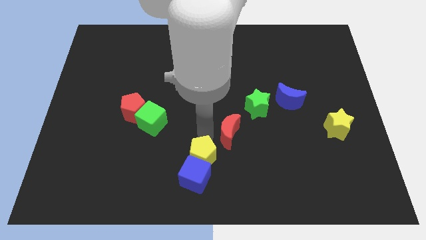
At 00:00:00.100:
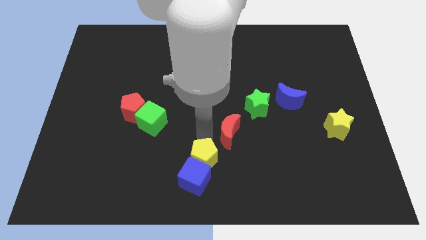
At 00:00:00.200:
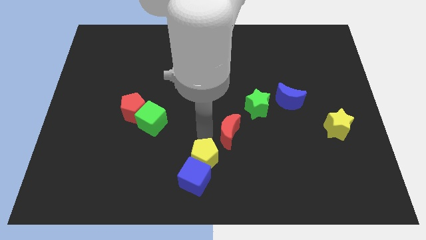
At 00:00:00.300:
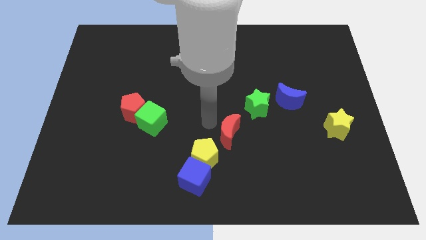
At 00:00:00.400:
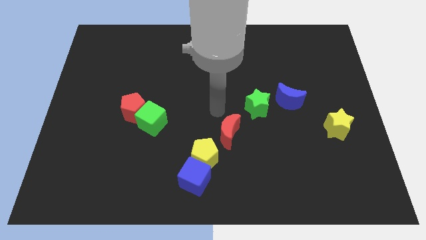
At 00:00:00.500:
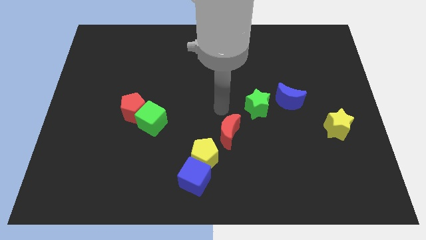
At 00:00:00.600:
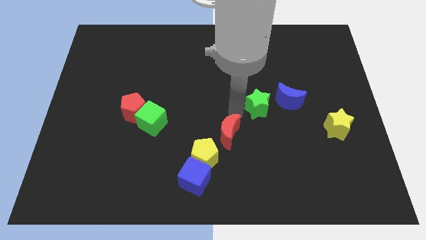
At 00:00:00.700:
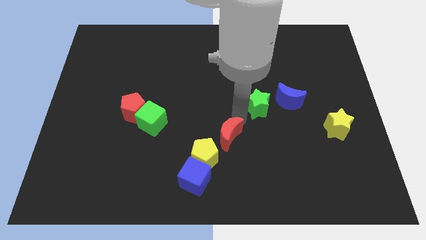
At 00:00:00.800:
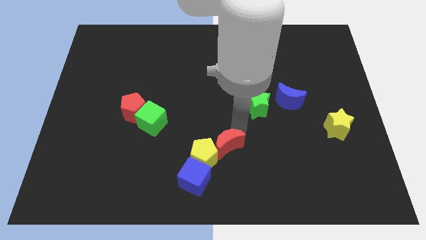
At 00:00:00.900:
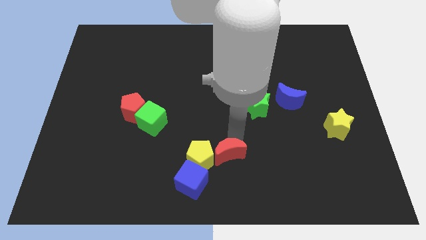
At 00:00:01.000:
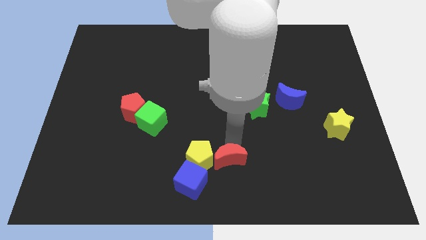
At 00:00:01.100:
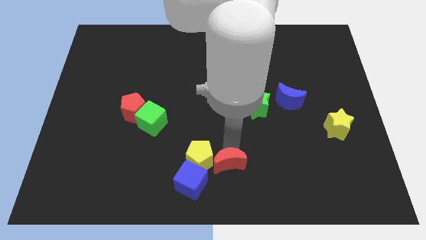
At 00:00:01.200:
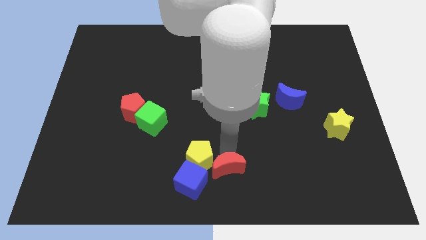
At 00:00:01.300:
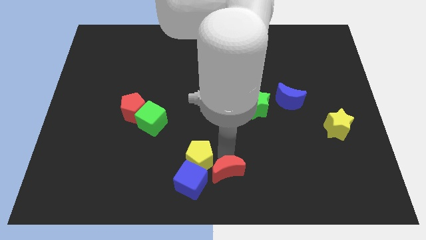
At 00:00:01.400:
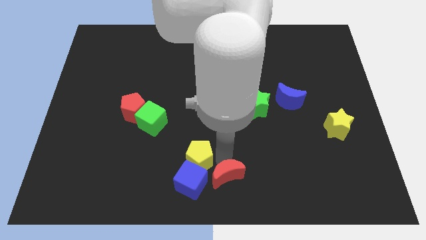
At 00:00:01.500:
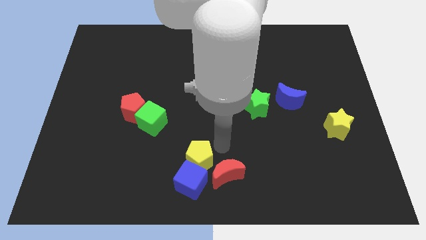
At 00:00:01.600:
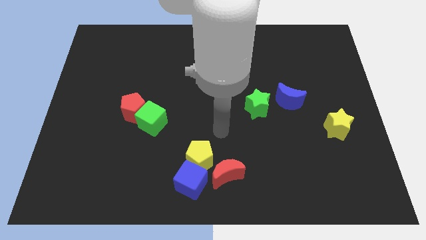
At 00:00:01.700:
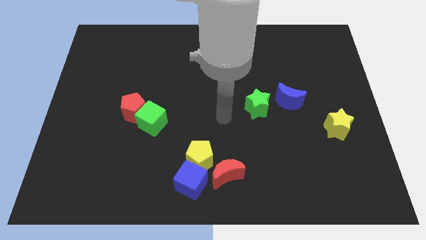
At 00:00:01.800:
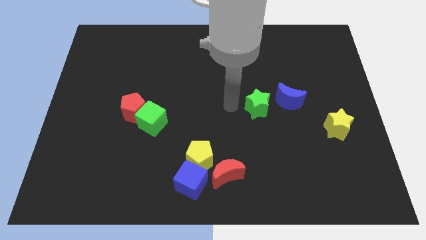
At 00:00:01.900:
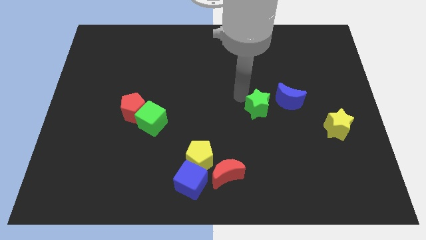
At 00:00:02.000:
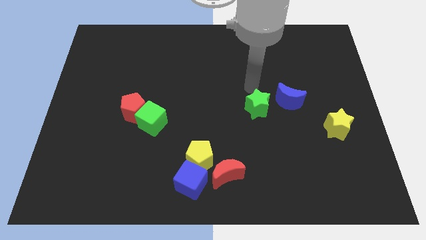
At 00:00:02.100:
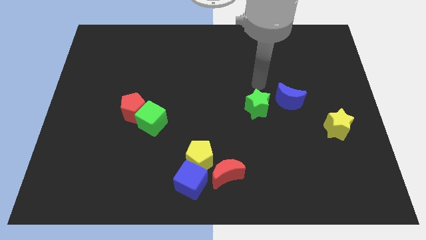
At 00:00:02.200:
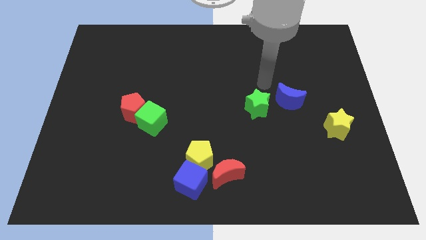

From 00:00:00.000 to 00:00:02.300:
put the red crescent near to the blue cube

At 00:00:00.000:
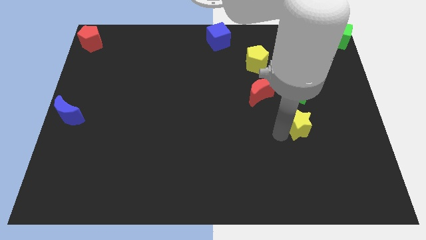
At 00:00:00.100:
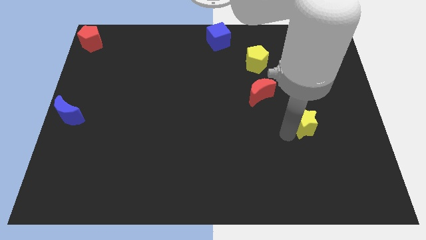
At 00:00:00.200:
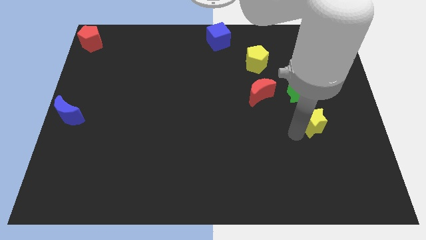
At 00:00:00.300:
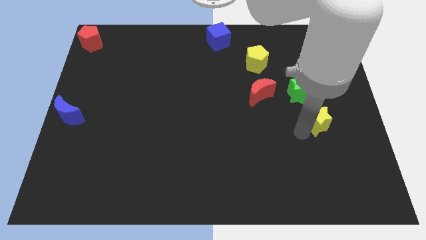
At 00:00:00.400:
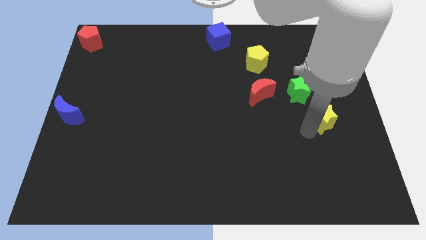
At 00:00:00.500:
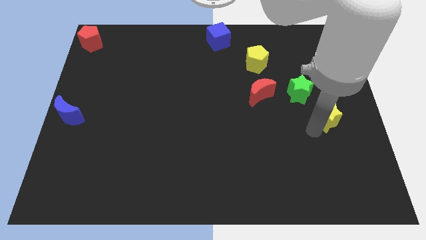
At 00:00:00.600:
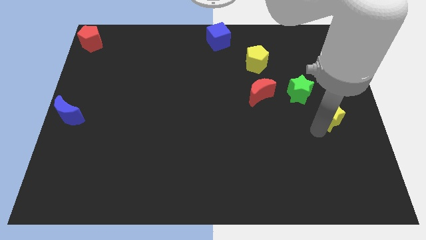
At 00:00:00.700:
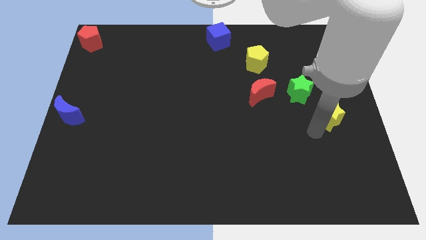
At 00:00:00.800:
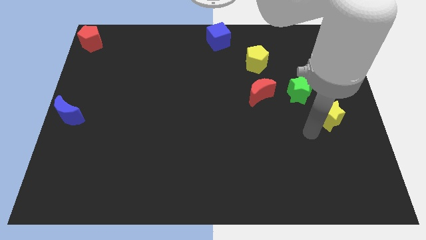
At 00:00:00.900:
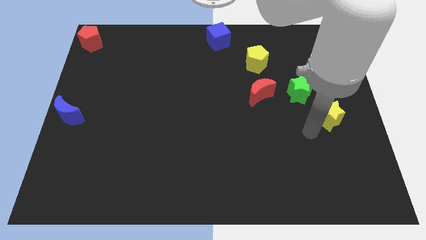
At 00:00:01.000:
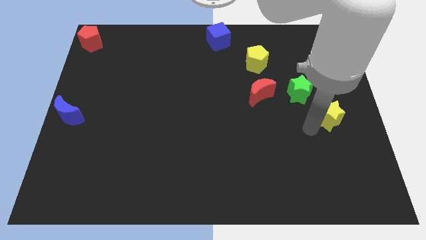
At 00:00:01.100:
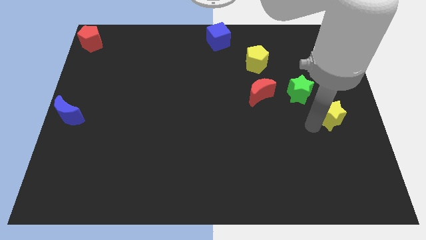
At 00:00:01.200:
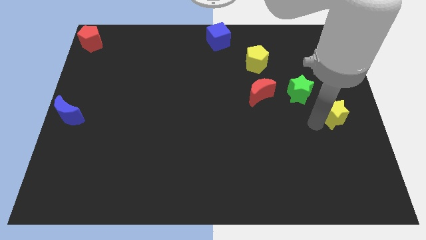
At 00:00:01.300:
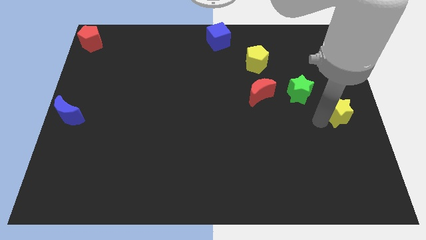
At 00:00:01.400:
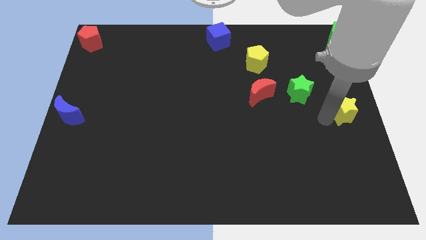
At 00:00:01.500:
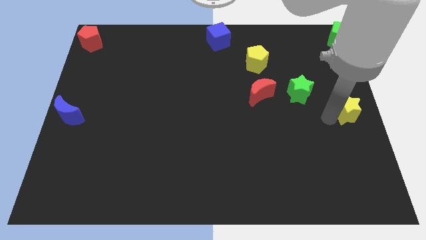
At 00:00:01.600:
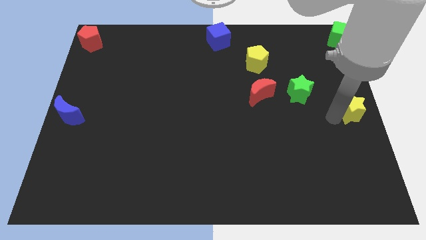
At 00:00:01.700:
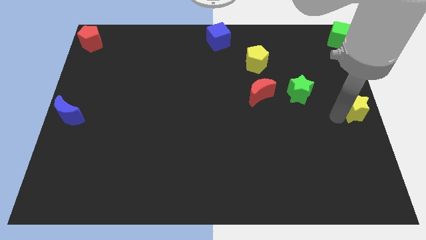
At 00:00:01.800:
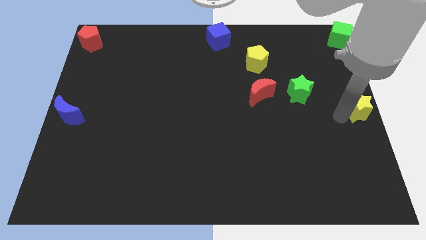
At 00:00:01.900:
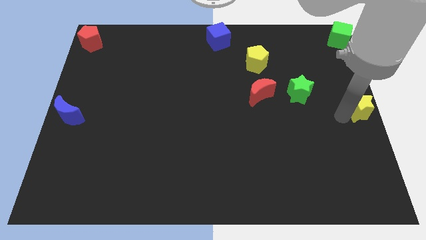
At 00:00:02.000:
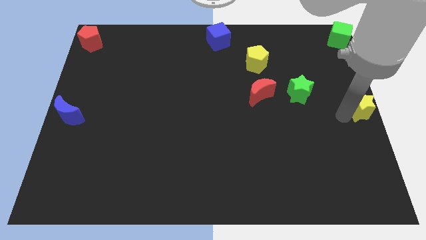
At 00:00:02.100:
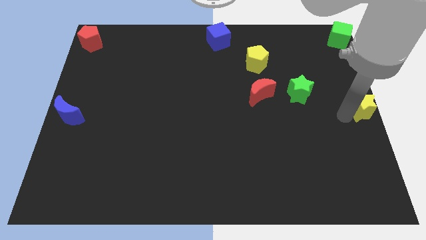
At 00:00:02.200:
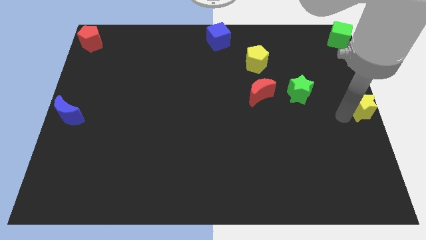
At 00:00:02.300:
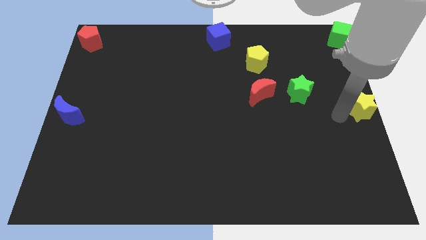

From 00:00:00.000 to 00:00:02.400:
push the yellow star to the right center of the board

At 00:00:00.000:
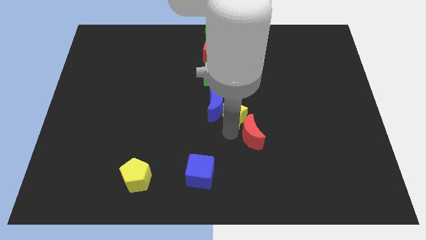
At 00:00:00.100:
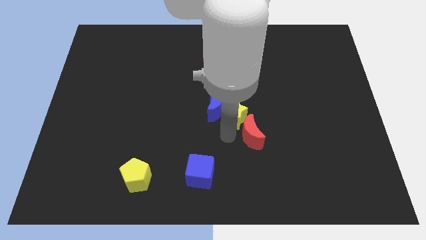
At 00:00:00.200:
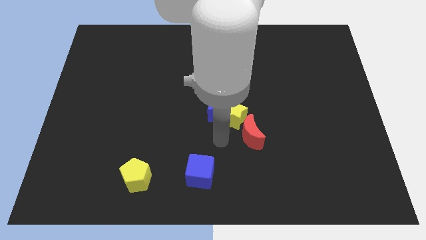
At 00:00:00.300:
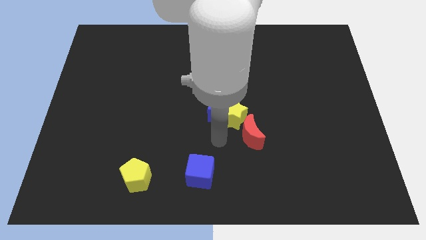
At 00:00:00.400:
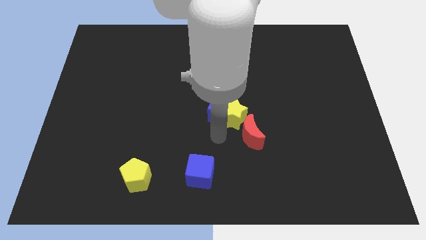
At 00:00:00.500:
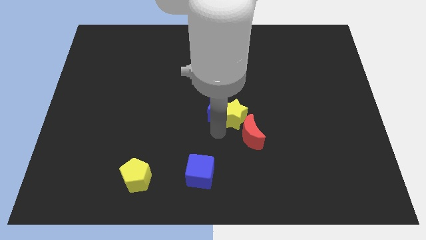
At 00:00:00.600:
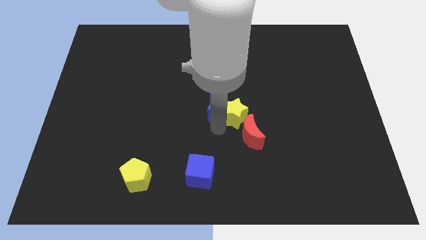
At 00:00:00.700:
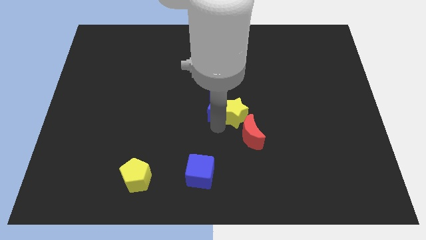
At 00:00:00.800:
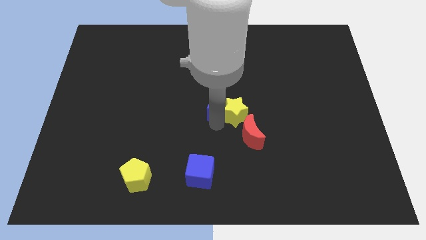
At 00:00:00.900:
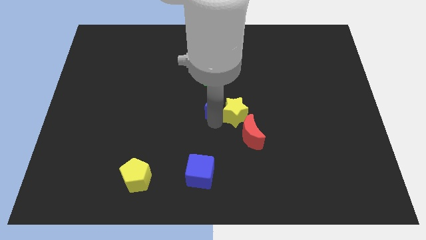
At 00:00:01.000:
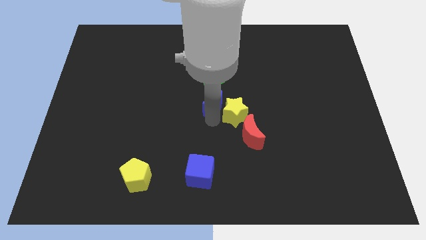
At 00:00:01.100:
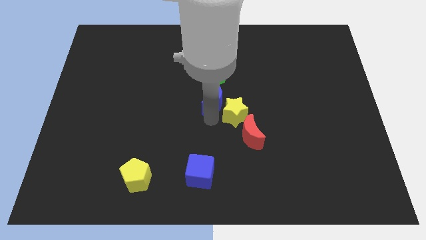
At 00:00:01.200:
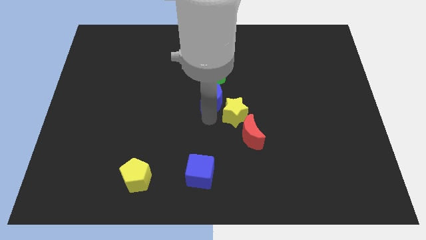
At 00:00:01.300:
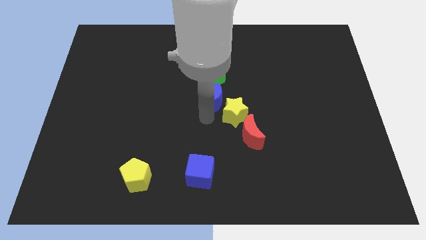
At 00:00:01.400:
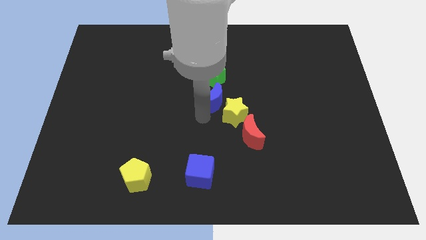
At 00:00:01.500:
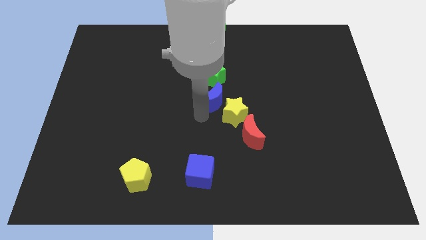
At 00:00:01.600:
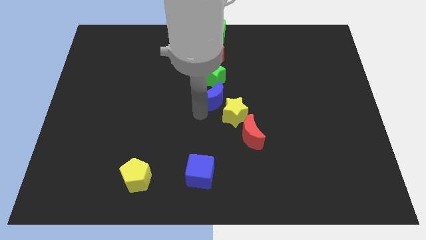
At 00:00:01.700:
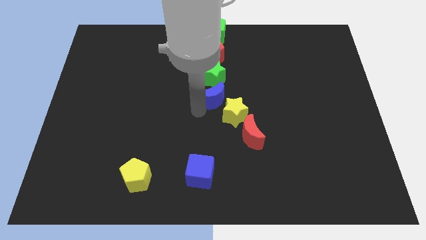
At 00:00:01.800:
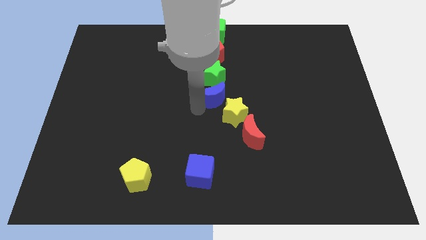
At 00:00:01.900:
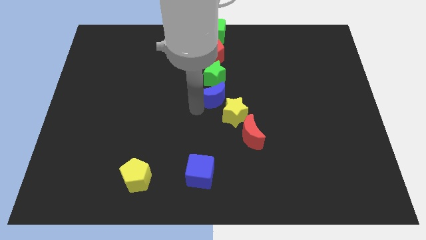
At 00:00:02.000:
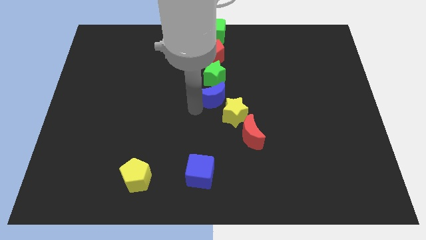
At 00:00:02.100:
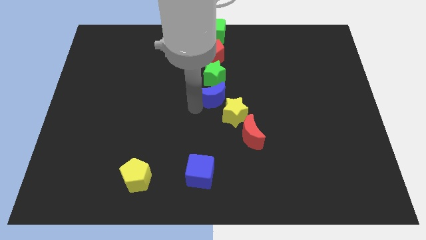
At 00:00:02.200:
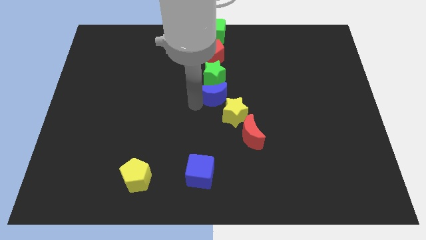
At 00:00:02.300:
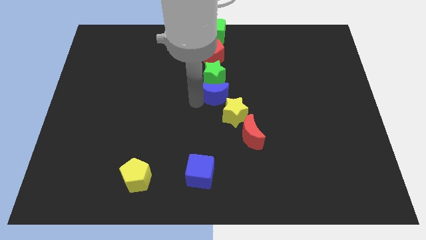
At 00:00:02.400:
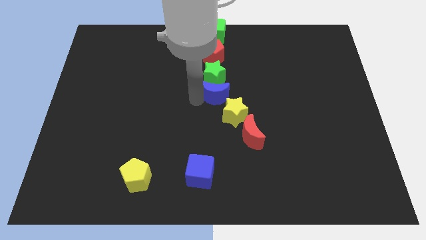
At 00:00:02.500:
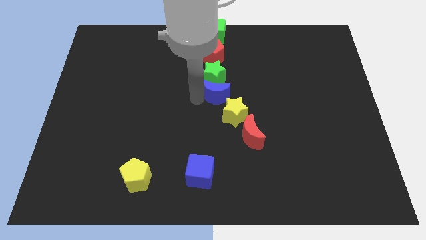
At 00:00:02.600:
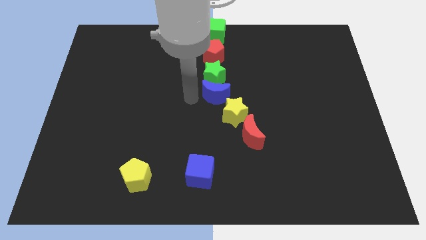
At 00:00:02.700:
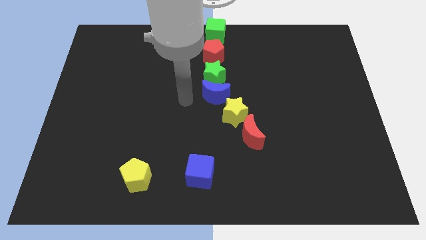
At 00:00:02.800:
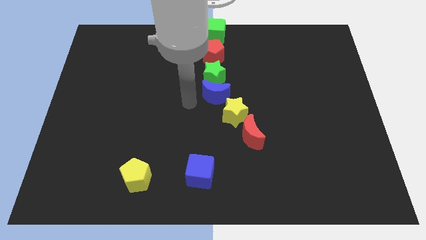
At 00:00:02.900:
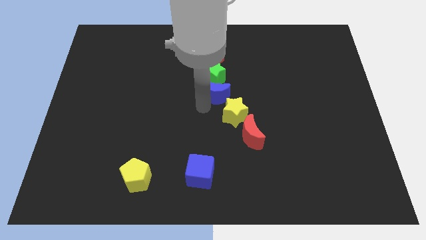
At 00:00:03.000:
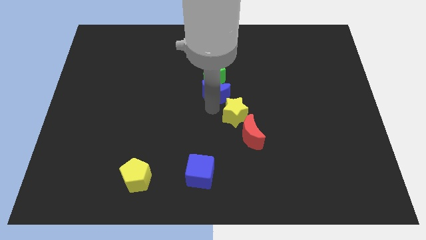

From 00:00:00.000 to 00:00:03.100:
turn the blue moon below the green star in a line

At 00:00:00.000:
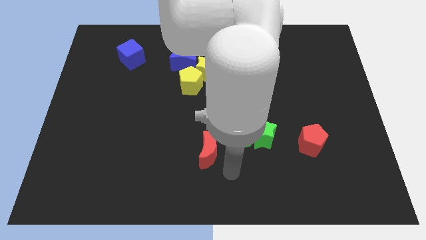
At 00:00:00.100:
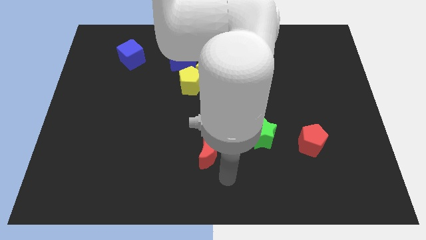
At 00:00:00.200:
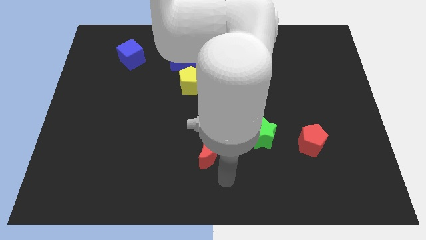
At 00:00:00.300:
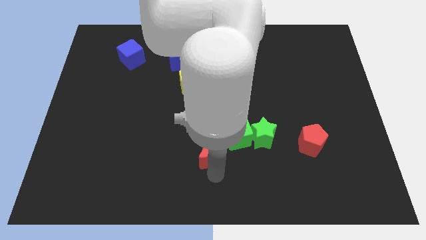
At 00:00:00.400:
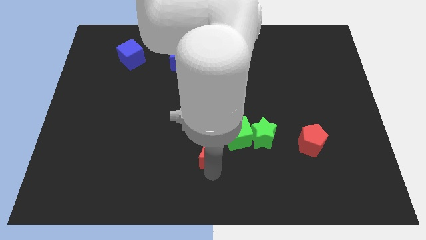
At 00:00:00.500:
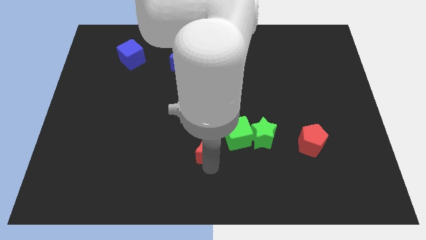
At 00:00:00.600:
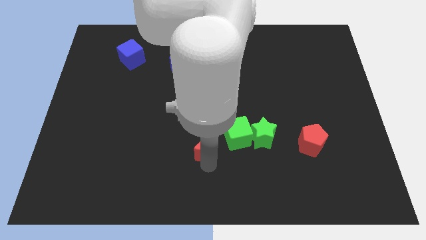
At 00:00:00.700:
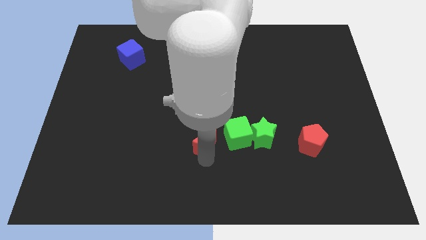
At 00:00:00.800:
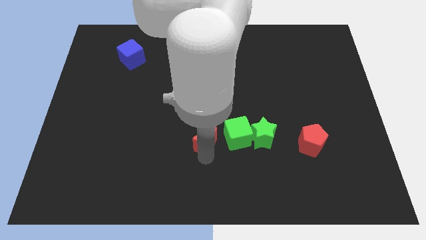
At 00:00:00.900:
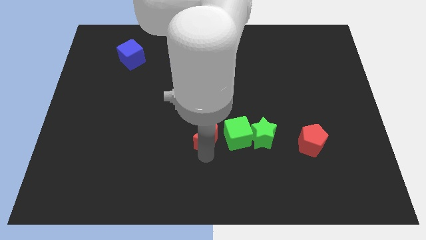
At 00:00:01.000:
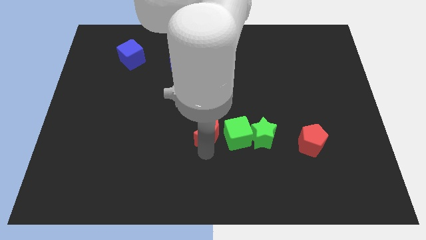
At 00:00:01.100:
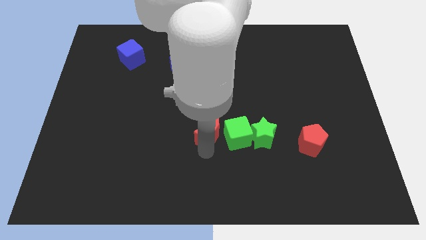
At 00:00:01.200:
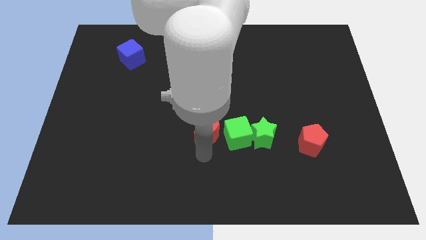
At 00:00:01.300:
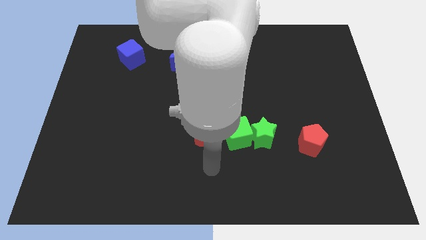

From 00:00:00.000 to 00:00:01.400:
move the red moon towards the center of the board
